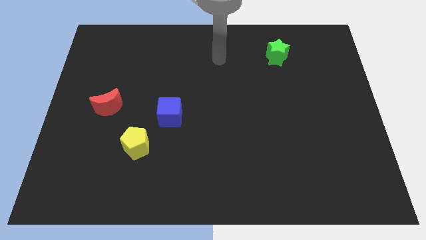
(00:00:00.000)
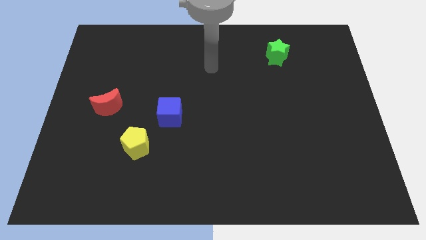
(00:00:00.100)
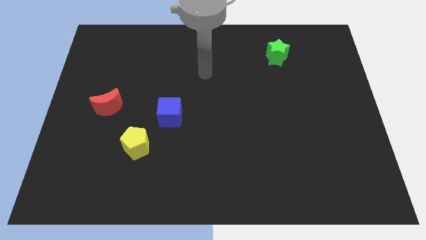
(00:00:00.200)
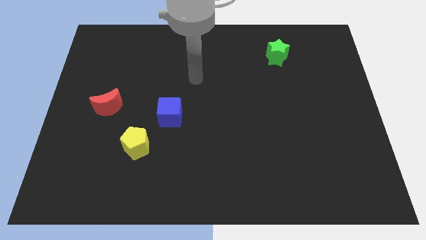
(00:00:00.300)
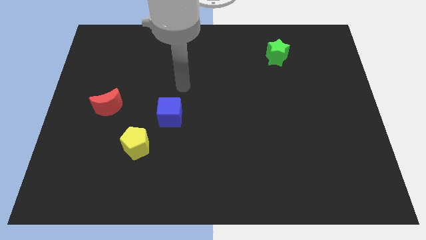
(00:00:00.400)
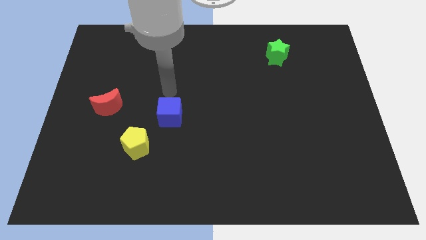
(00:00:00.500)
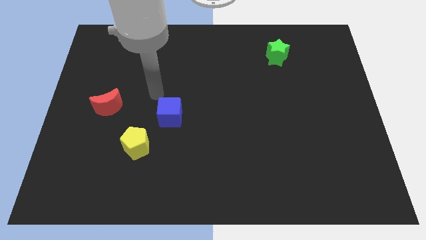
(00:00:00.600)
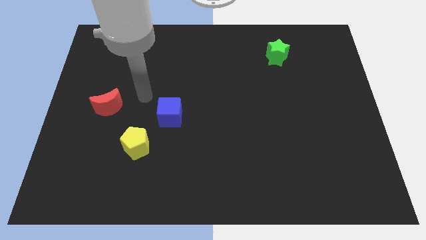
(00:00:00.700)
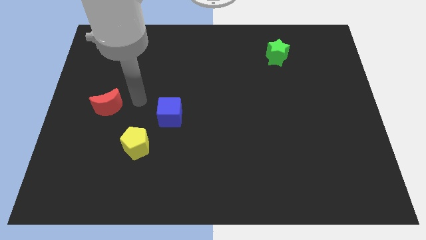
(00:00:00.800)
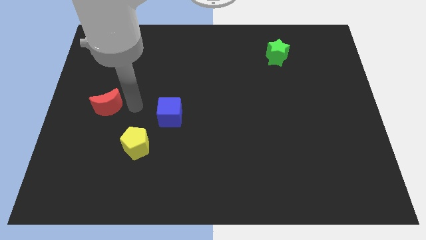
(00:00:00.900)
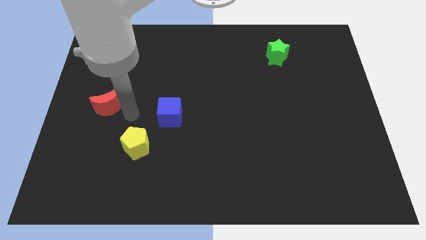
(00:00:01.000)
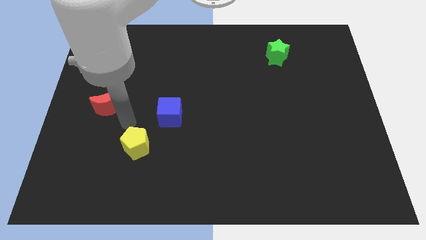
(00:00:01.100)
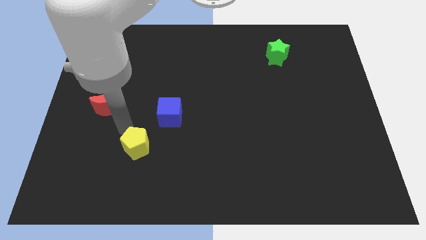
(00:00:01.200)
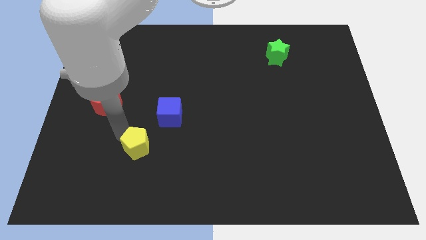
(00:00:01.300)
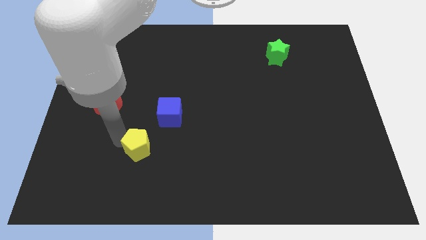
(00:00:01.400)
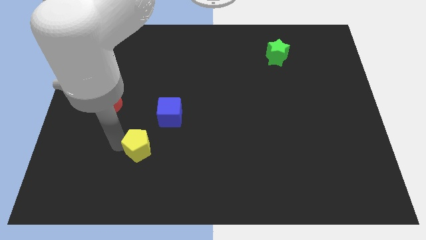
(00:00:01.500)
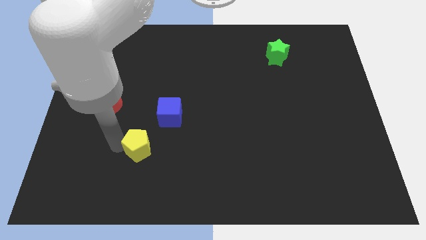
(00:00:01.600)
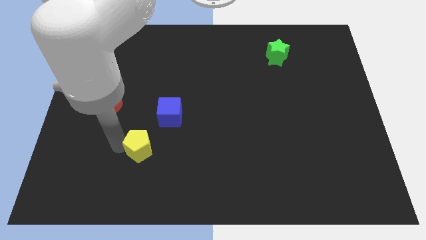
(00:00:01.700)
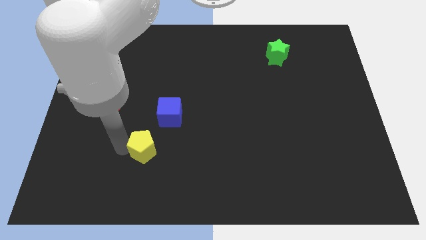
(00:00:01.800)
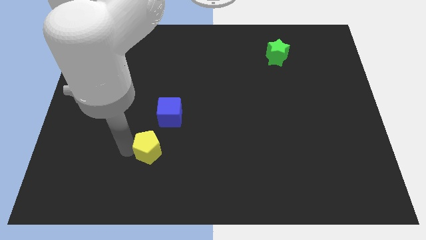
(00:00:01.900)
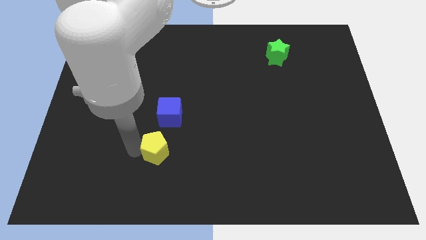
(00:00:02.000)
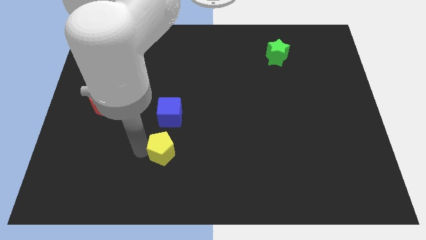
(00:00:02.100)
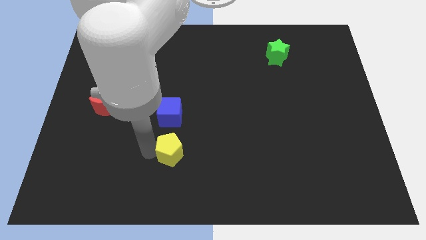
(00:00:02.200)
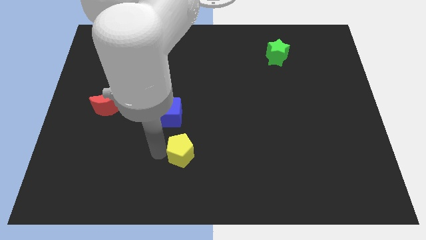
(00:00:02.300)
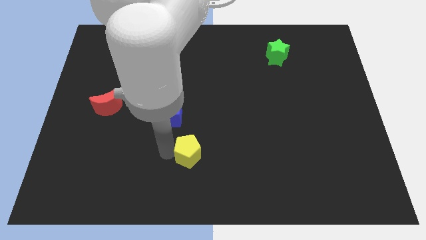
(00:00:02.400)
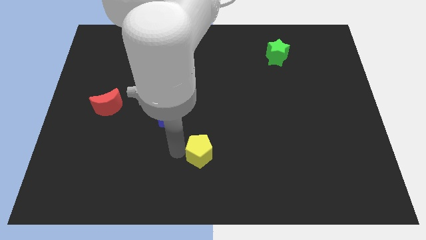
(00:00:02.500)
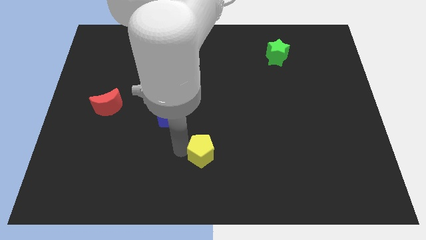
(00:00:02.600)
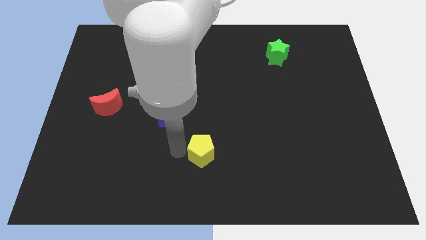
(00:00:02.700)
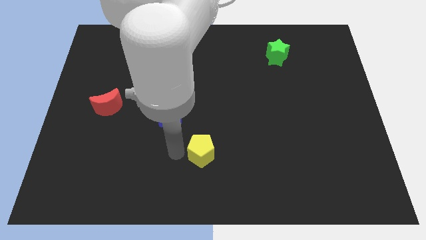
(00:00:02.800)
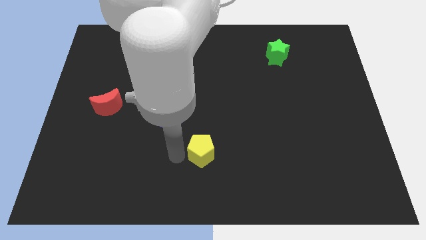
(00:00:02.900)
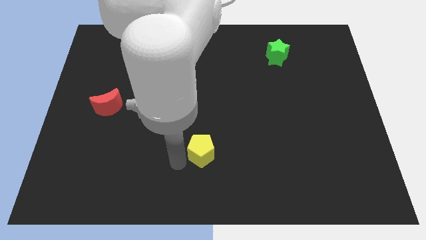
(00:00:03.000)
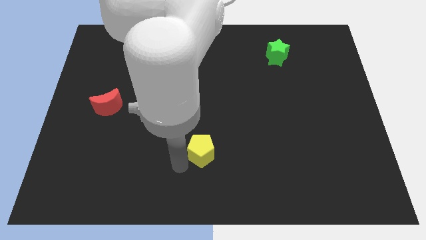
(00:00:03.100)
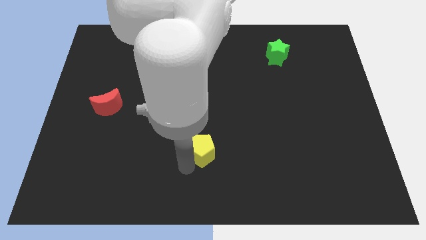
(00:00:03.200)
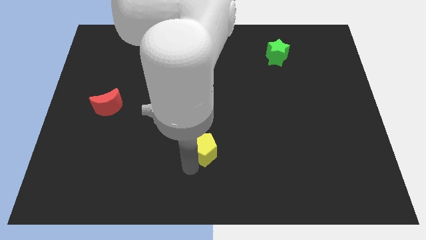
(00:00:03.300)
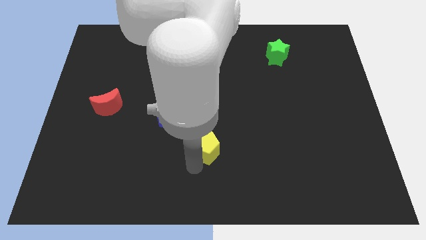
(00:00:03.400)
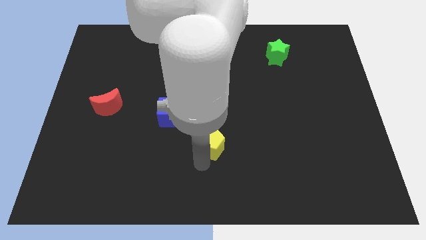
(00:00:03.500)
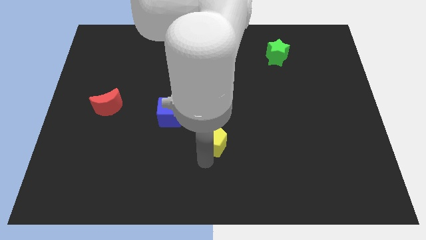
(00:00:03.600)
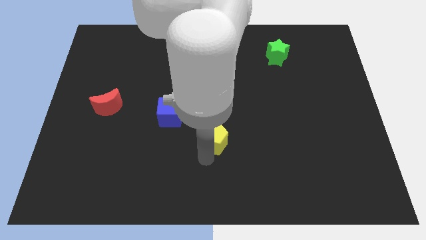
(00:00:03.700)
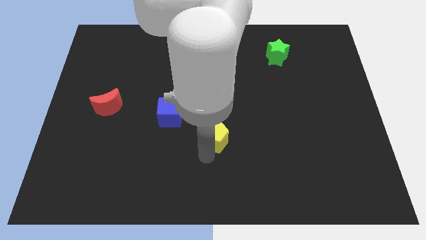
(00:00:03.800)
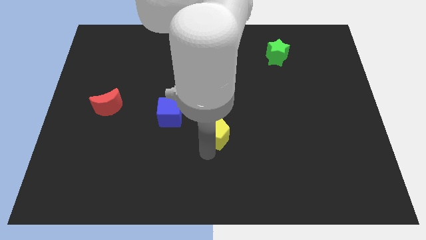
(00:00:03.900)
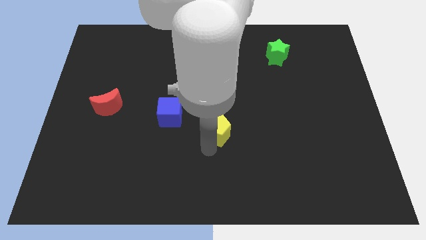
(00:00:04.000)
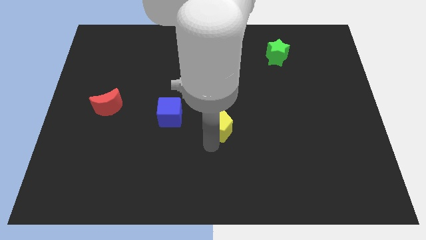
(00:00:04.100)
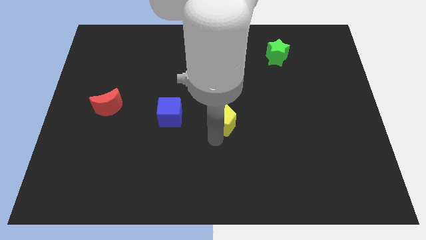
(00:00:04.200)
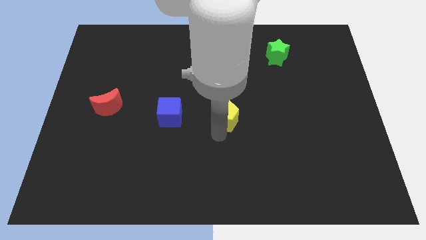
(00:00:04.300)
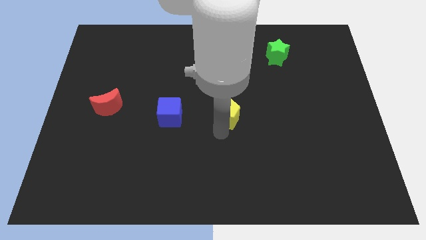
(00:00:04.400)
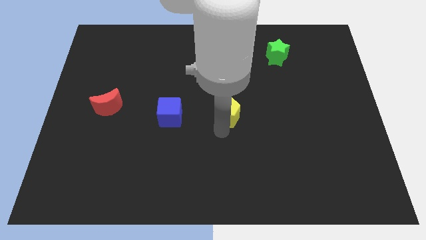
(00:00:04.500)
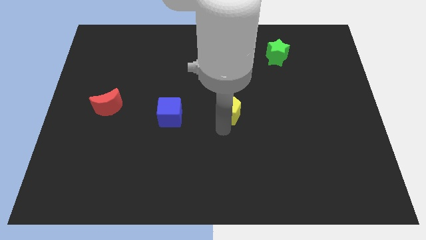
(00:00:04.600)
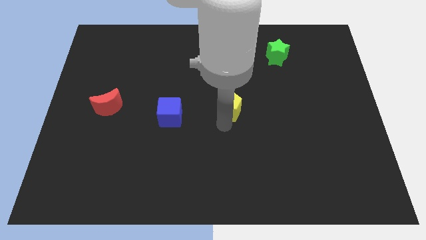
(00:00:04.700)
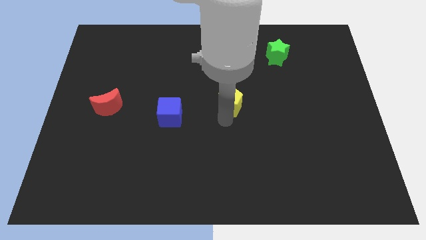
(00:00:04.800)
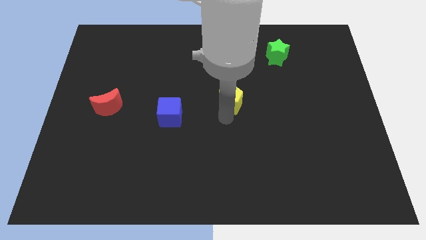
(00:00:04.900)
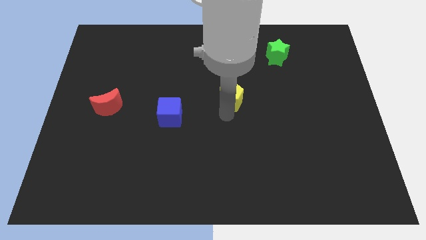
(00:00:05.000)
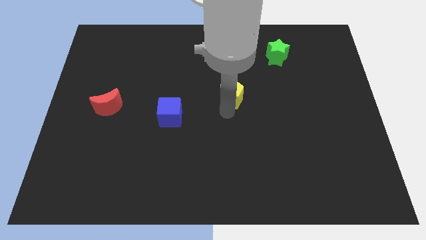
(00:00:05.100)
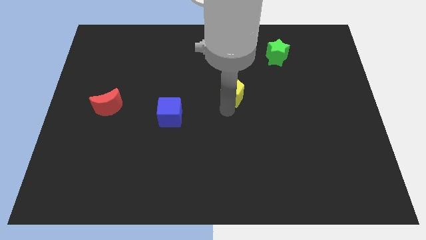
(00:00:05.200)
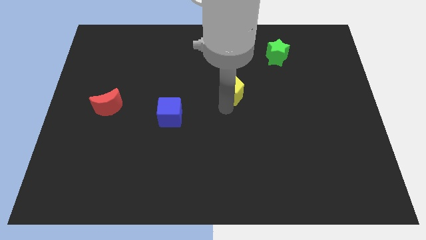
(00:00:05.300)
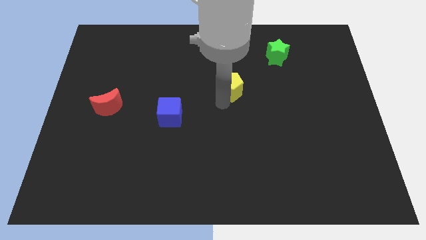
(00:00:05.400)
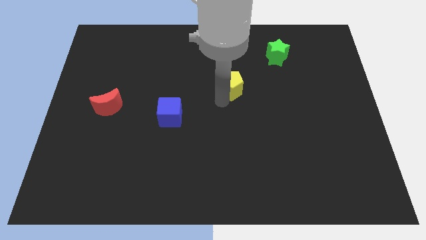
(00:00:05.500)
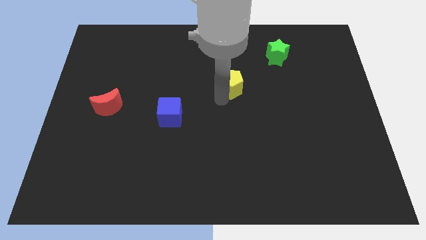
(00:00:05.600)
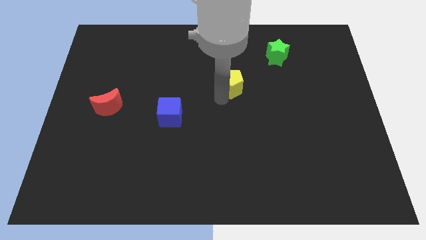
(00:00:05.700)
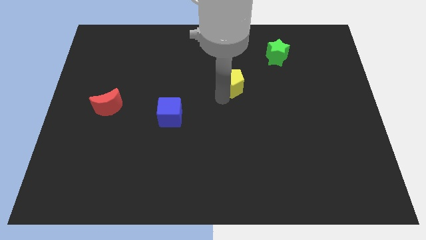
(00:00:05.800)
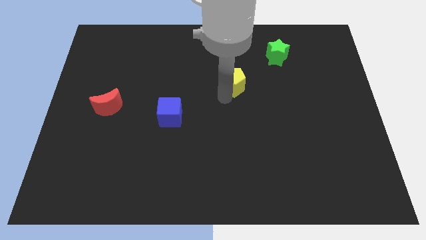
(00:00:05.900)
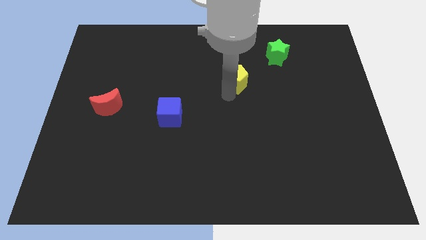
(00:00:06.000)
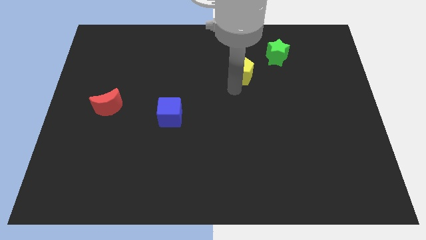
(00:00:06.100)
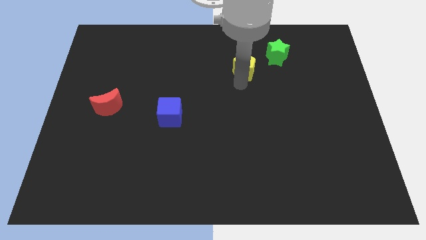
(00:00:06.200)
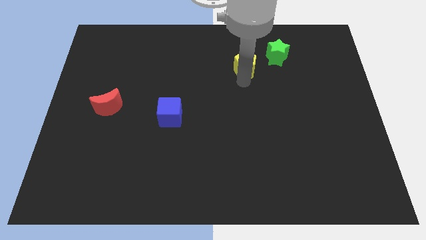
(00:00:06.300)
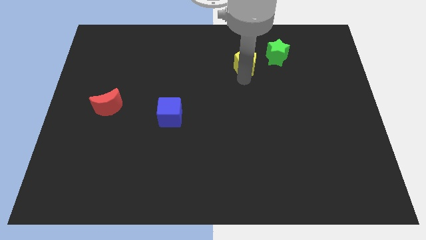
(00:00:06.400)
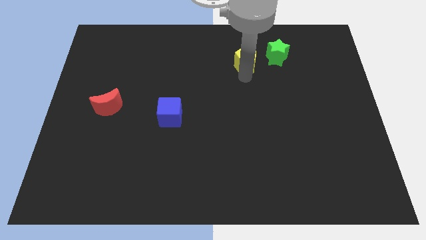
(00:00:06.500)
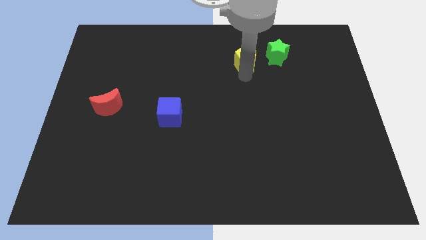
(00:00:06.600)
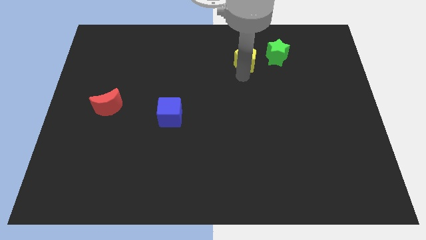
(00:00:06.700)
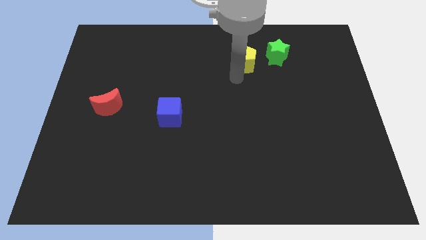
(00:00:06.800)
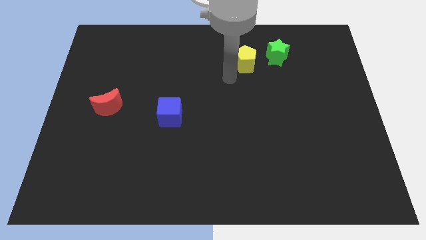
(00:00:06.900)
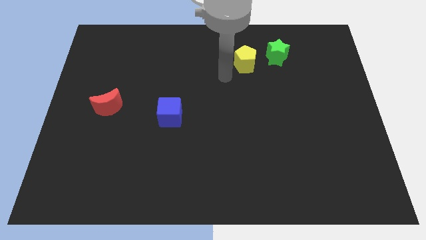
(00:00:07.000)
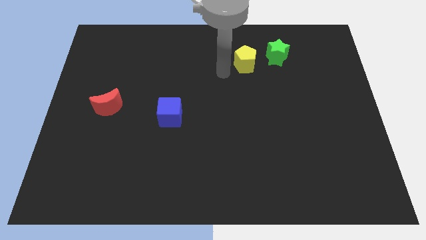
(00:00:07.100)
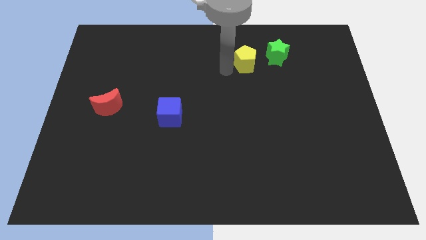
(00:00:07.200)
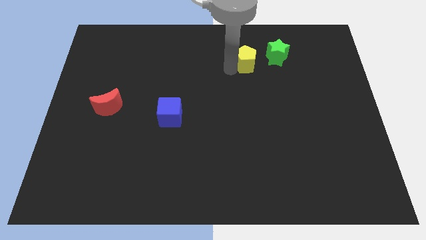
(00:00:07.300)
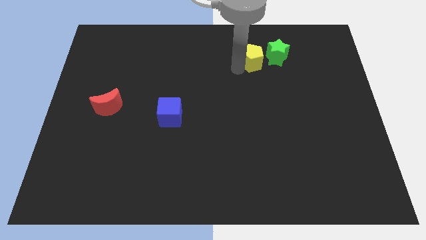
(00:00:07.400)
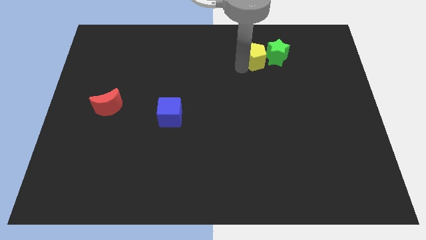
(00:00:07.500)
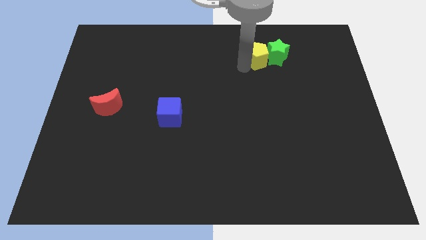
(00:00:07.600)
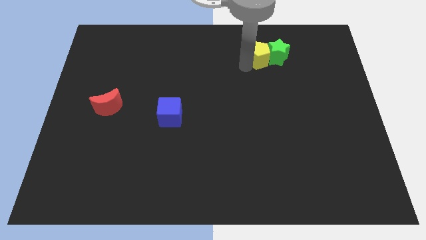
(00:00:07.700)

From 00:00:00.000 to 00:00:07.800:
push the yellow pentagon to the star

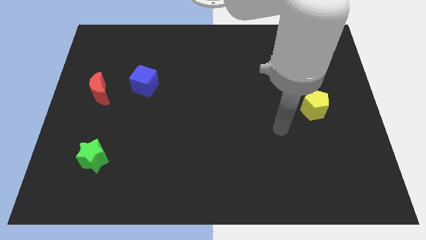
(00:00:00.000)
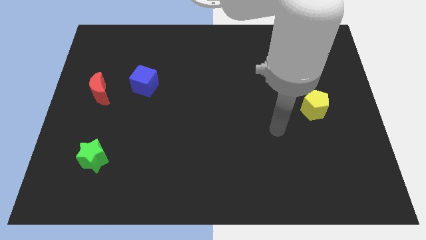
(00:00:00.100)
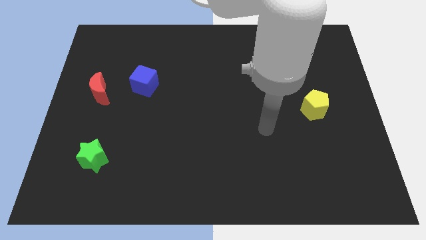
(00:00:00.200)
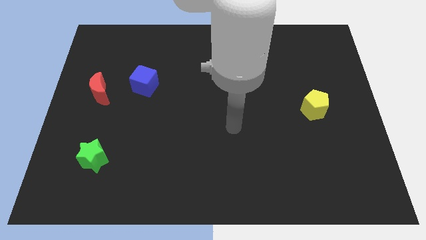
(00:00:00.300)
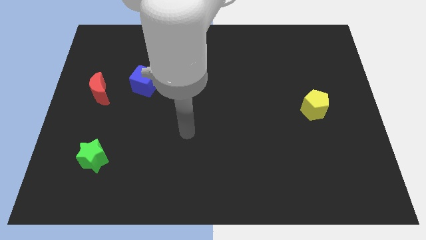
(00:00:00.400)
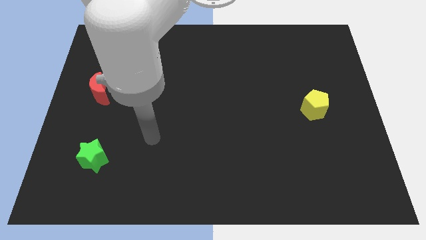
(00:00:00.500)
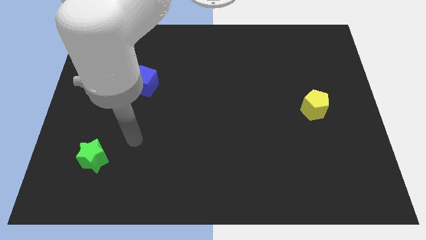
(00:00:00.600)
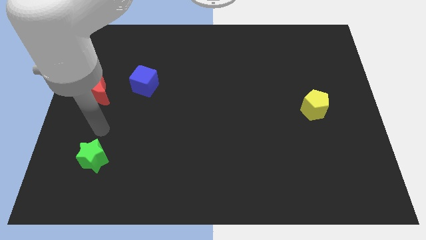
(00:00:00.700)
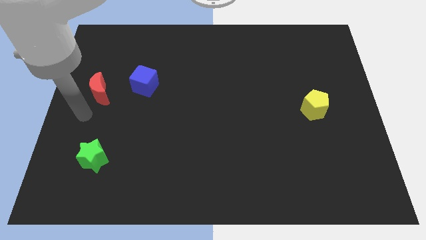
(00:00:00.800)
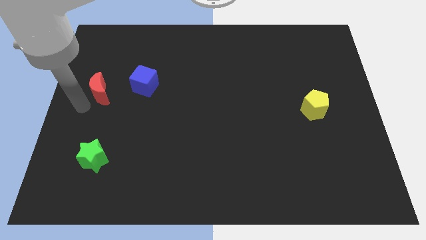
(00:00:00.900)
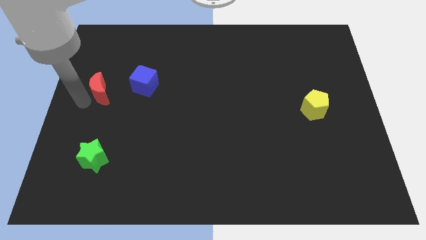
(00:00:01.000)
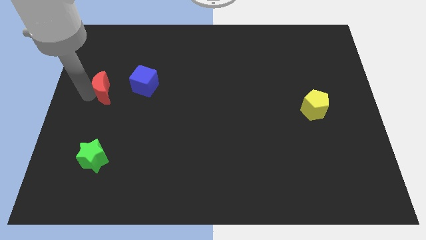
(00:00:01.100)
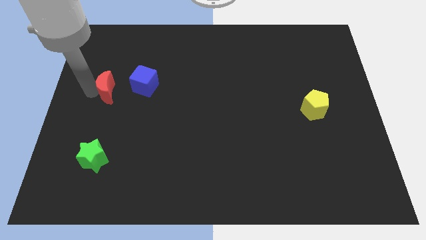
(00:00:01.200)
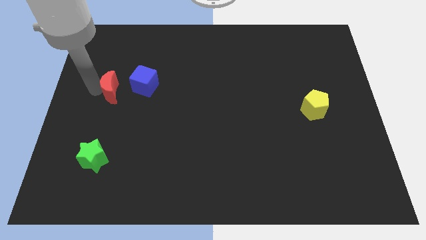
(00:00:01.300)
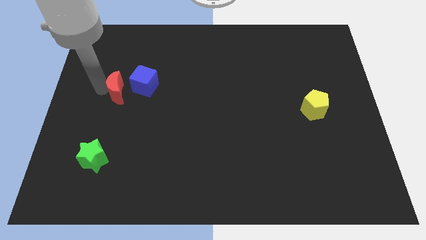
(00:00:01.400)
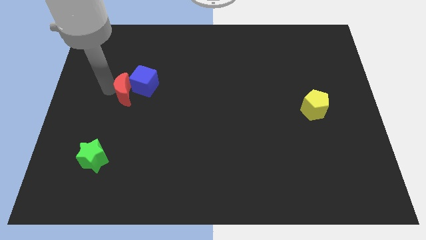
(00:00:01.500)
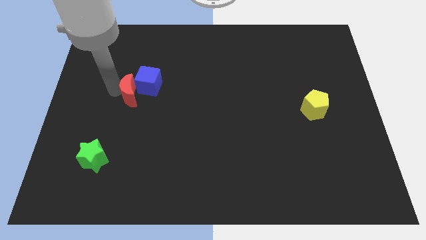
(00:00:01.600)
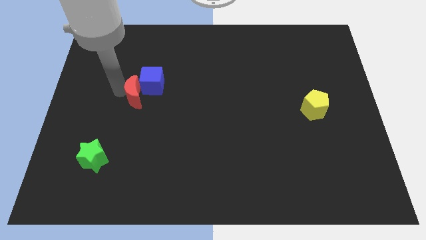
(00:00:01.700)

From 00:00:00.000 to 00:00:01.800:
slide the moon close to the blue cube
